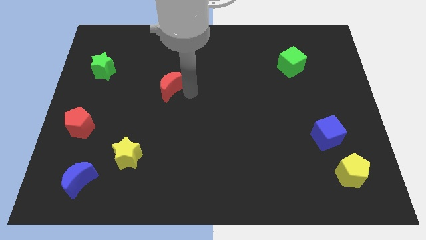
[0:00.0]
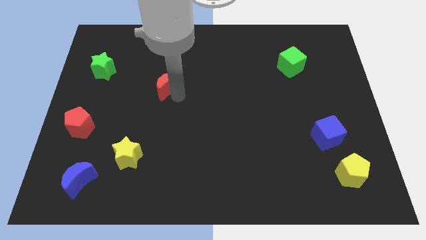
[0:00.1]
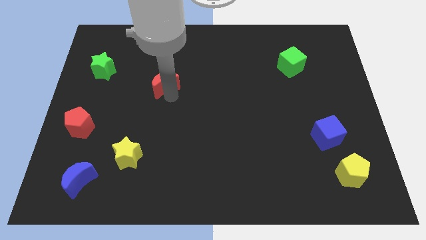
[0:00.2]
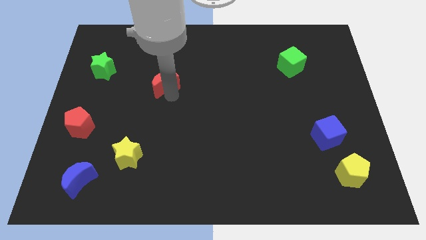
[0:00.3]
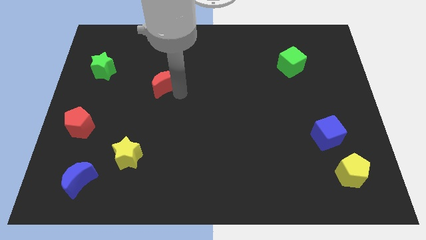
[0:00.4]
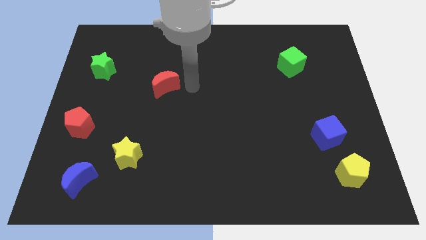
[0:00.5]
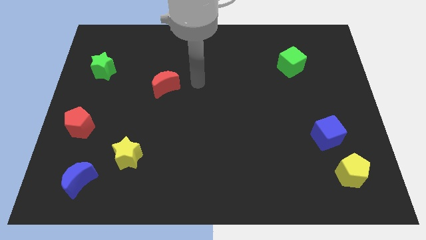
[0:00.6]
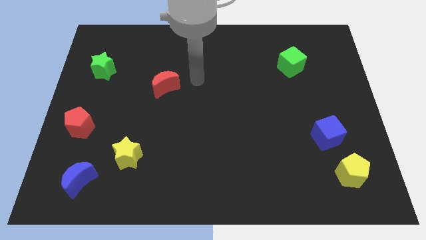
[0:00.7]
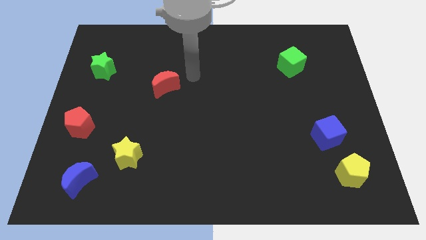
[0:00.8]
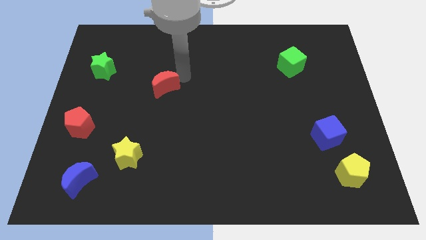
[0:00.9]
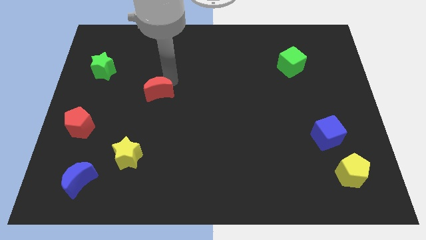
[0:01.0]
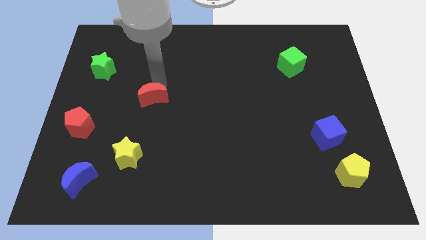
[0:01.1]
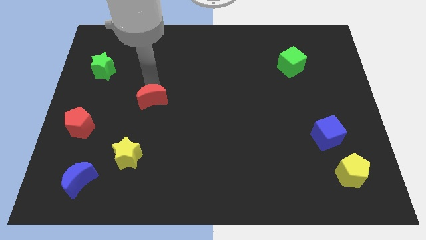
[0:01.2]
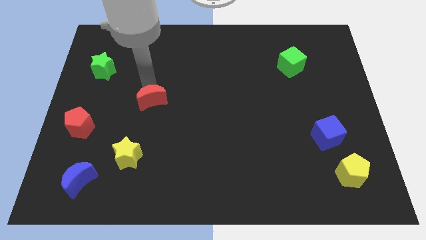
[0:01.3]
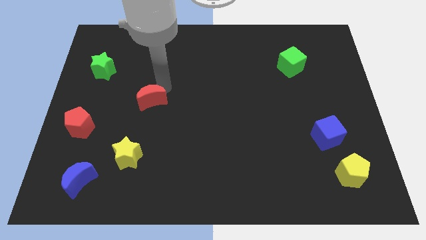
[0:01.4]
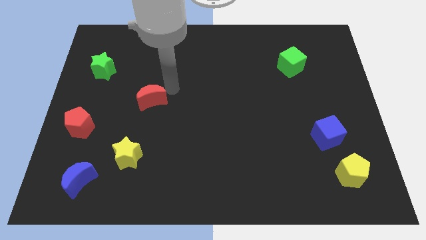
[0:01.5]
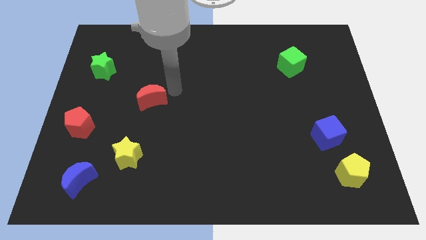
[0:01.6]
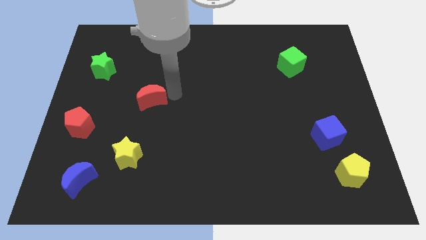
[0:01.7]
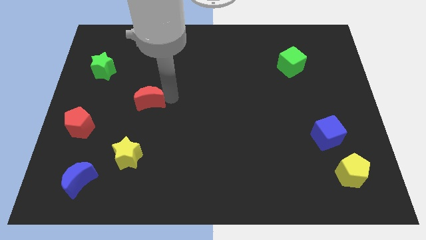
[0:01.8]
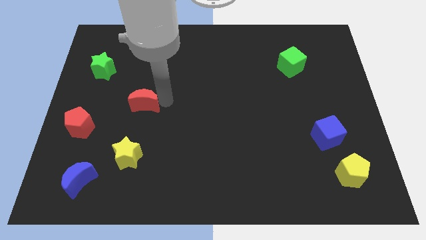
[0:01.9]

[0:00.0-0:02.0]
move red crescent vertically towards yellow star

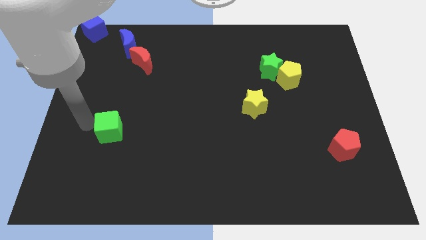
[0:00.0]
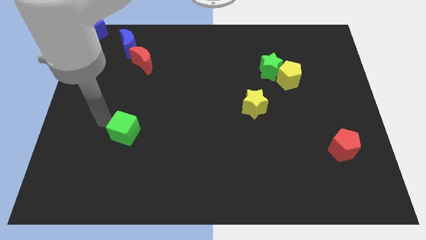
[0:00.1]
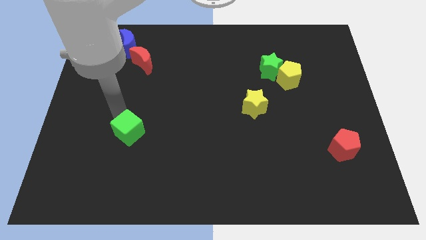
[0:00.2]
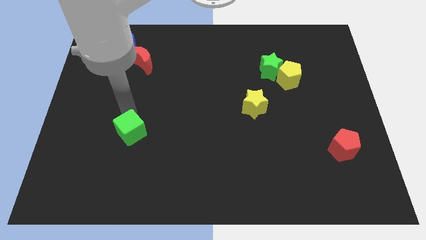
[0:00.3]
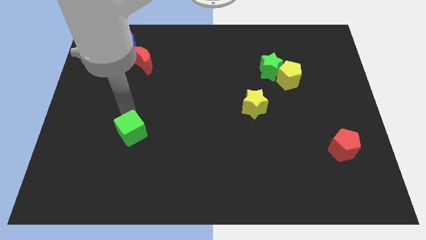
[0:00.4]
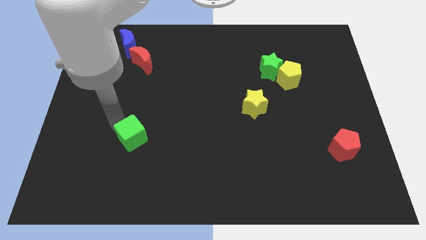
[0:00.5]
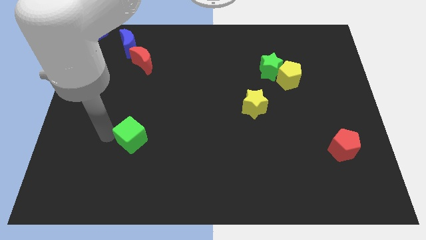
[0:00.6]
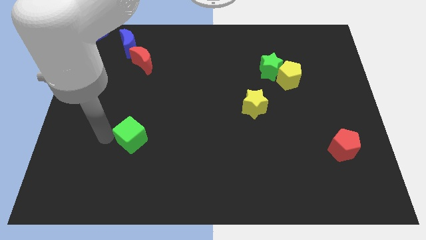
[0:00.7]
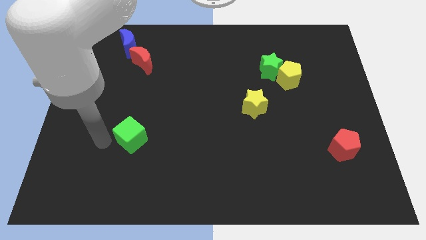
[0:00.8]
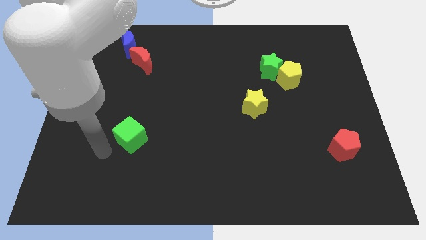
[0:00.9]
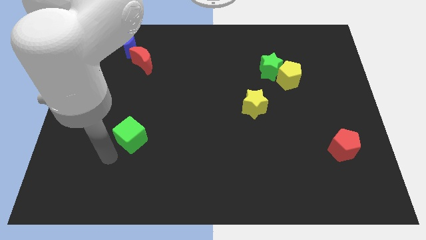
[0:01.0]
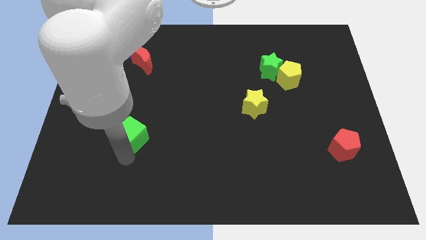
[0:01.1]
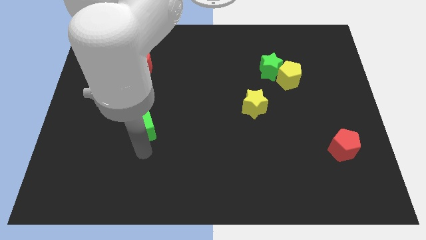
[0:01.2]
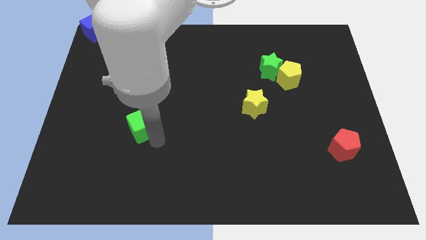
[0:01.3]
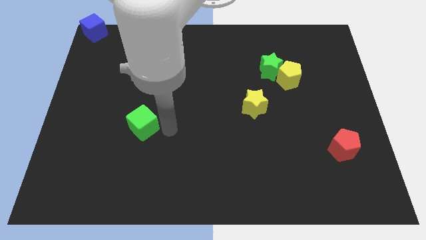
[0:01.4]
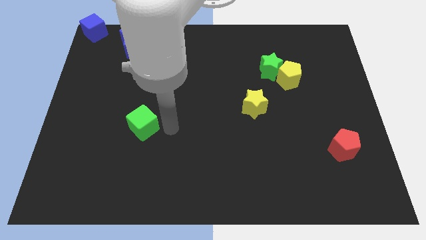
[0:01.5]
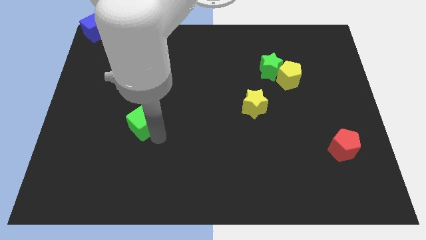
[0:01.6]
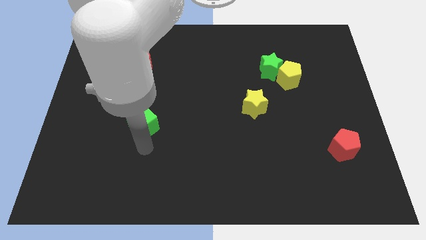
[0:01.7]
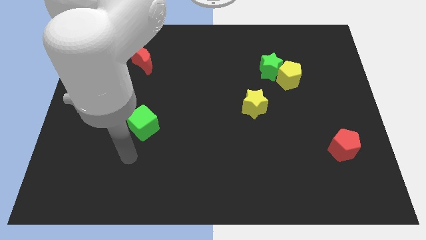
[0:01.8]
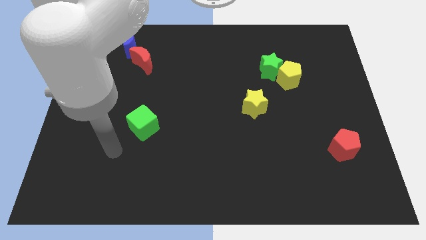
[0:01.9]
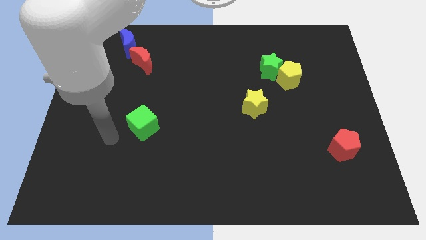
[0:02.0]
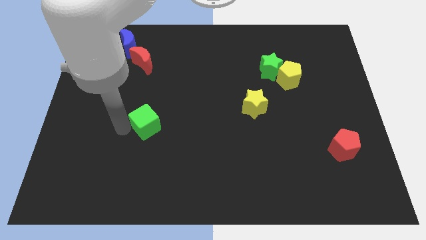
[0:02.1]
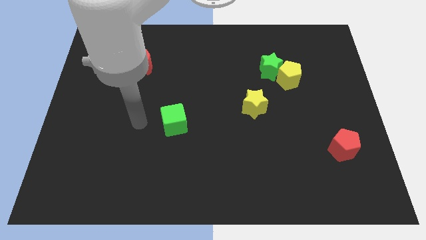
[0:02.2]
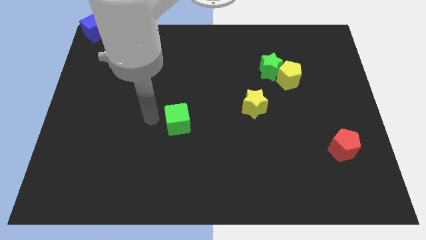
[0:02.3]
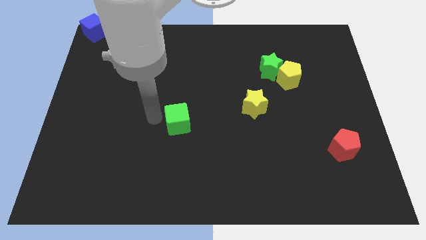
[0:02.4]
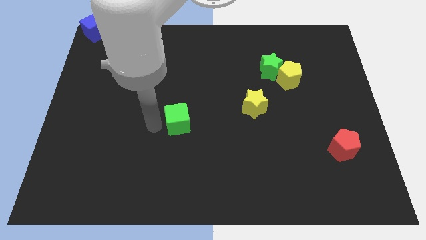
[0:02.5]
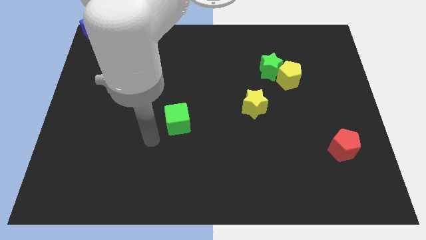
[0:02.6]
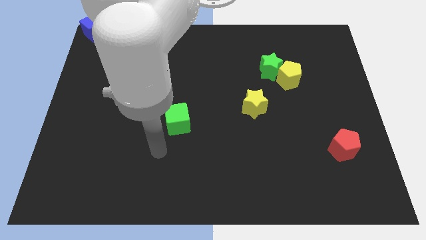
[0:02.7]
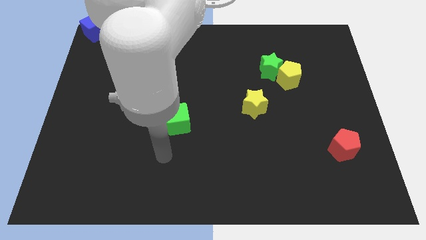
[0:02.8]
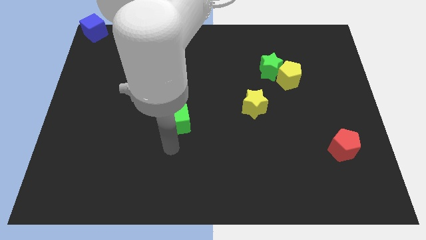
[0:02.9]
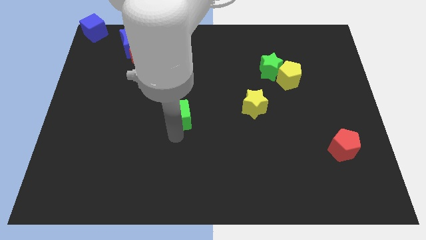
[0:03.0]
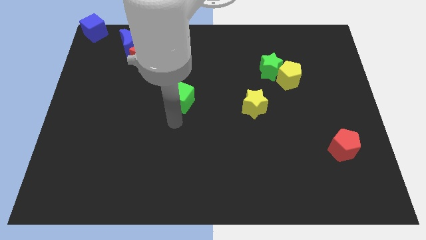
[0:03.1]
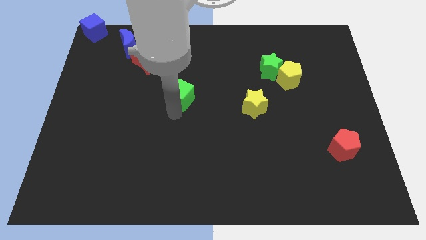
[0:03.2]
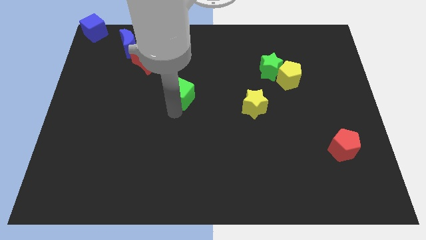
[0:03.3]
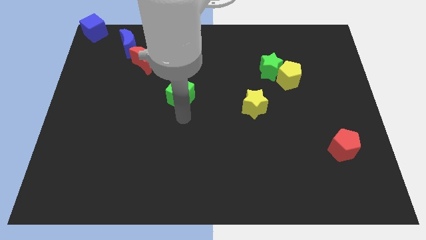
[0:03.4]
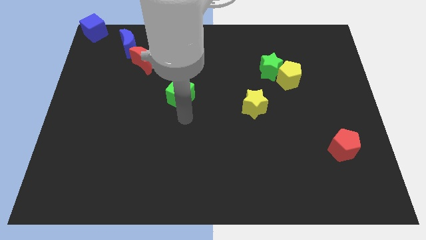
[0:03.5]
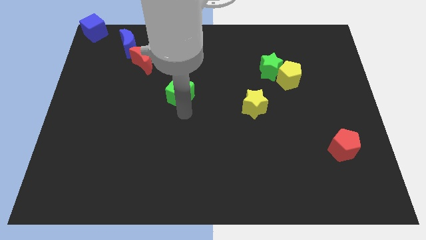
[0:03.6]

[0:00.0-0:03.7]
move the green cube to the left of the yellow star

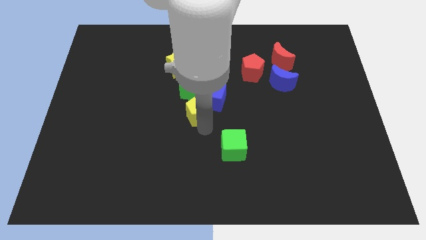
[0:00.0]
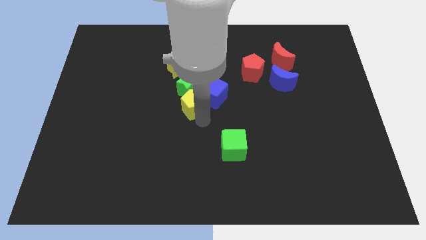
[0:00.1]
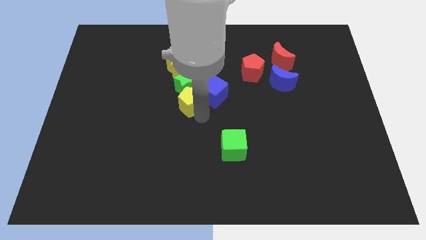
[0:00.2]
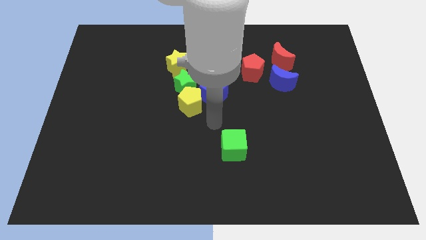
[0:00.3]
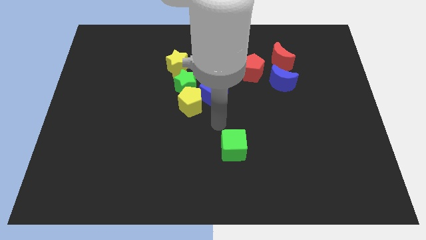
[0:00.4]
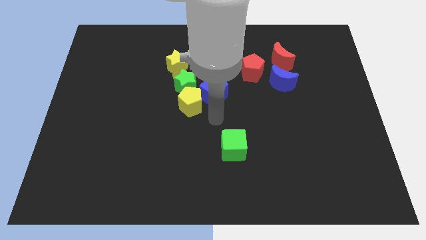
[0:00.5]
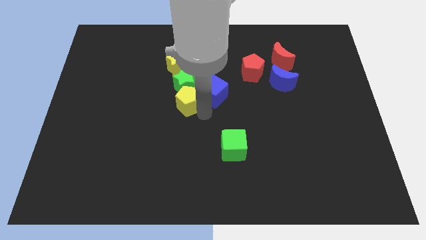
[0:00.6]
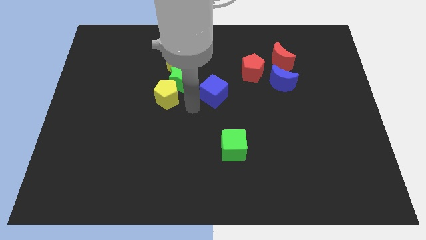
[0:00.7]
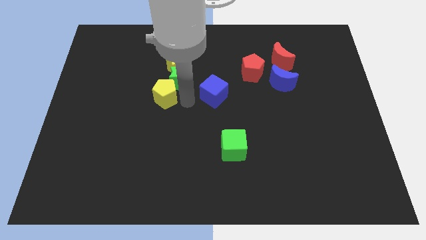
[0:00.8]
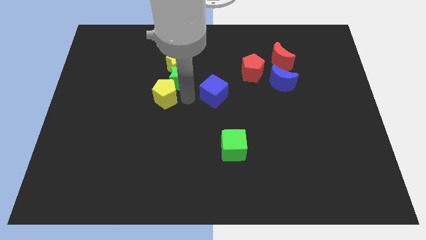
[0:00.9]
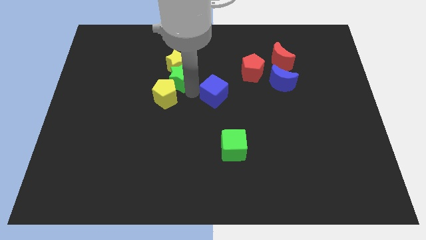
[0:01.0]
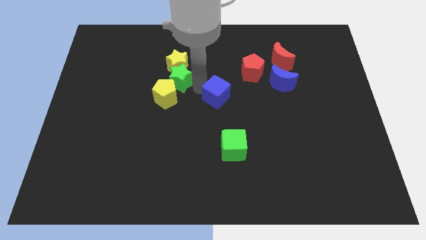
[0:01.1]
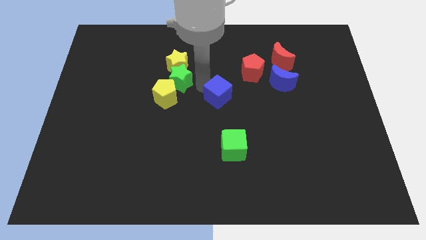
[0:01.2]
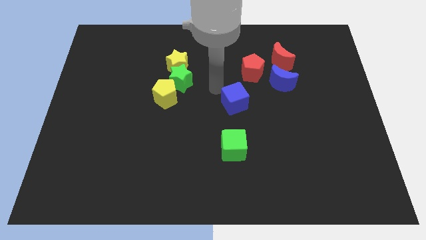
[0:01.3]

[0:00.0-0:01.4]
hit the yellow pentagon which is left to blue cube

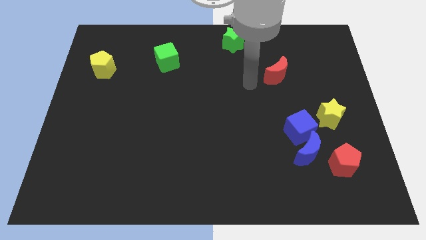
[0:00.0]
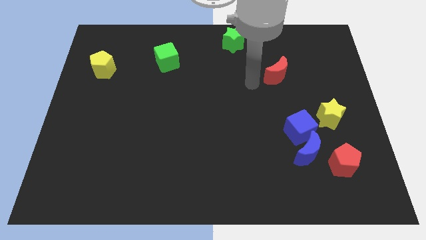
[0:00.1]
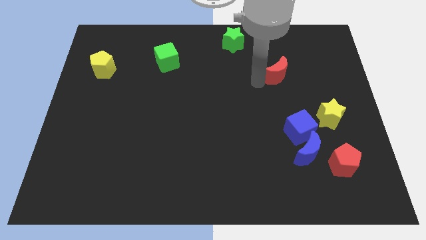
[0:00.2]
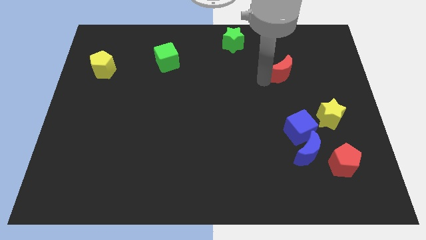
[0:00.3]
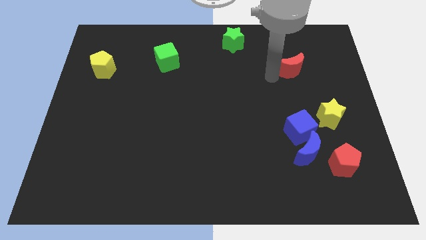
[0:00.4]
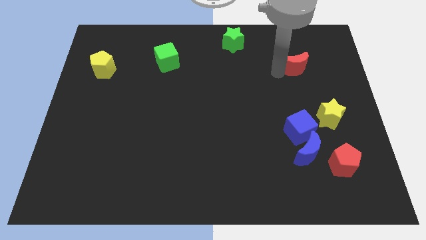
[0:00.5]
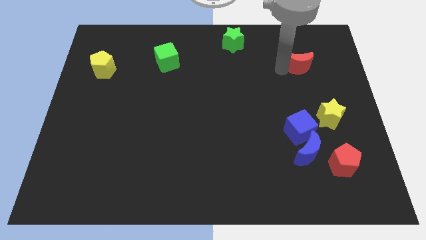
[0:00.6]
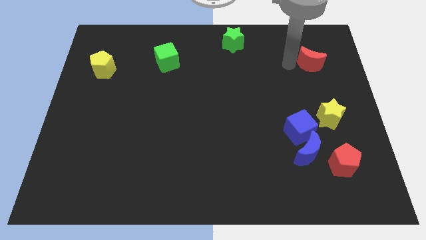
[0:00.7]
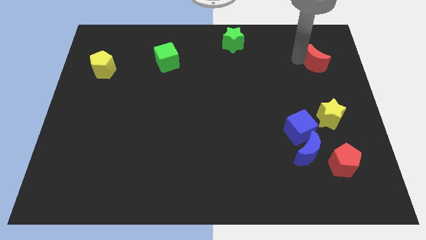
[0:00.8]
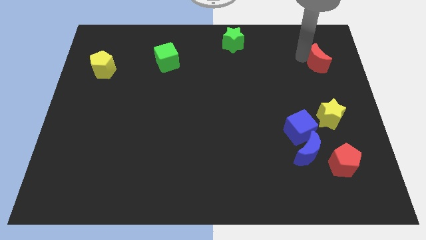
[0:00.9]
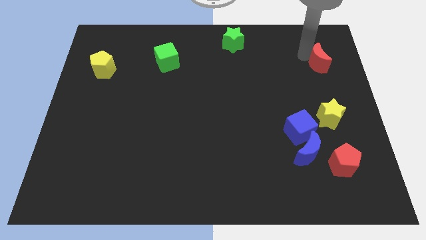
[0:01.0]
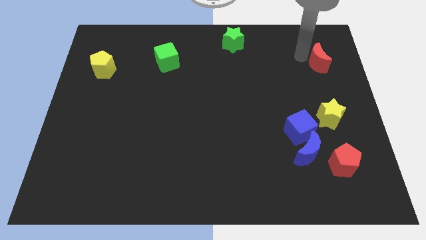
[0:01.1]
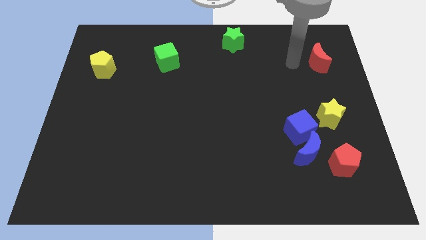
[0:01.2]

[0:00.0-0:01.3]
push the red crescent up slightly

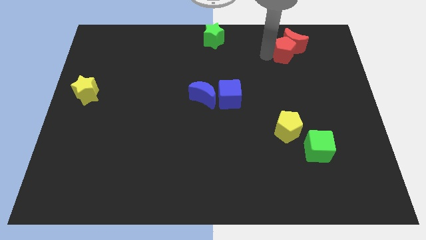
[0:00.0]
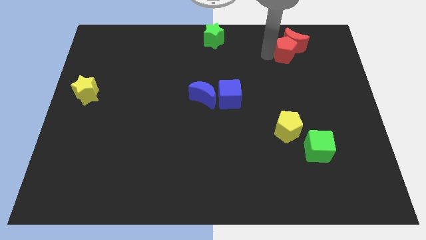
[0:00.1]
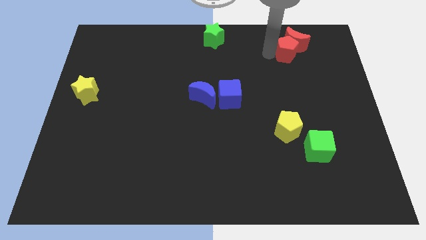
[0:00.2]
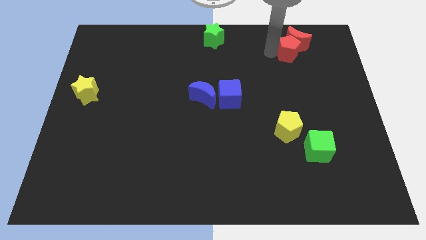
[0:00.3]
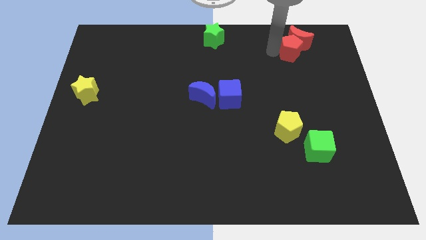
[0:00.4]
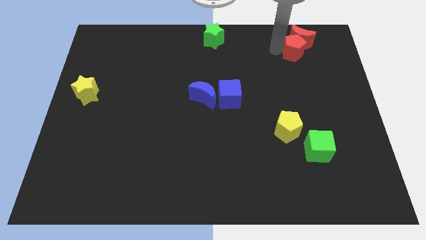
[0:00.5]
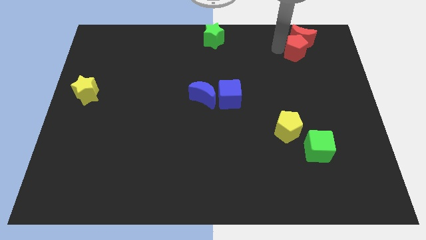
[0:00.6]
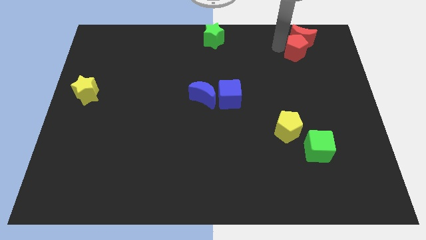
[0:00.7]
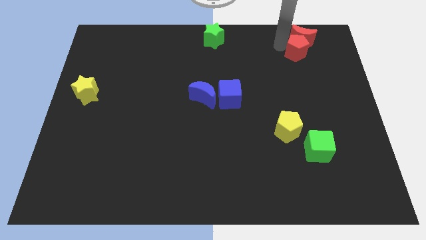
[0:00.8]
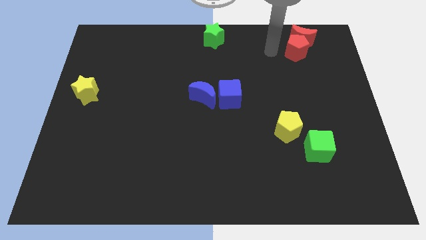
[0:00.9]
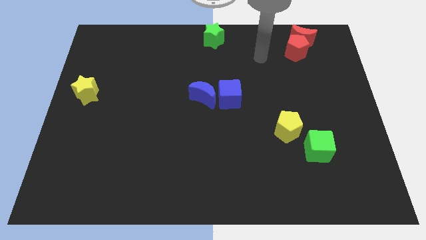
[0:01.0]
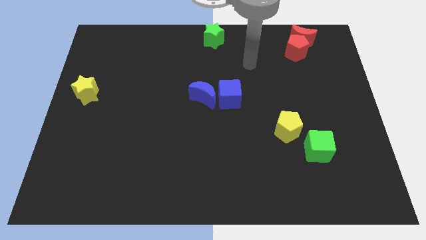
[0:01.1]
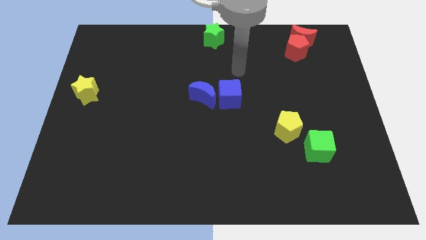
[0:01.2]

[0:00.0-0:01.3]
push the red crescent with red pentagon towards the top right of the board
